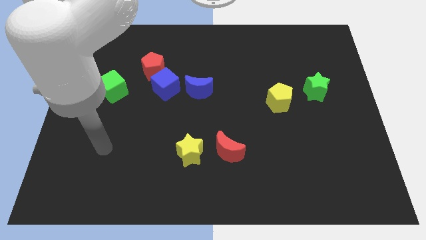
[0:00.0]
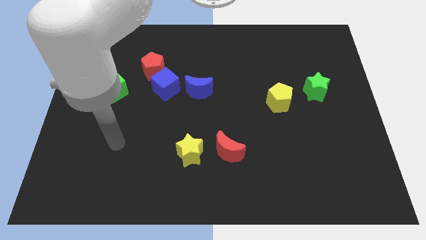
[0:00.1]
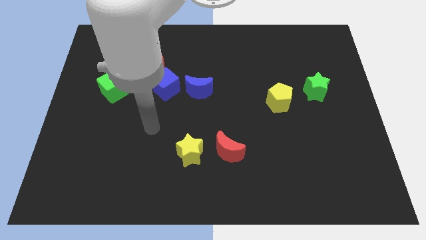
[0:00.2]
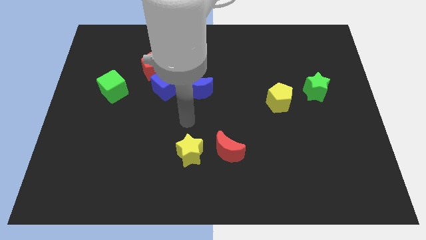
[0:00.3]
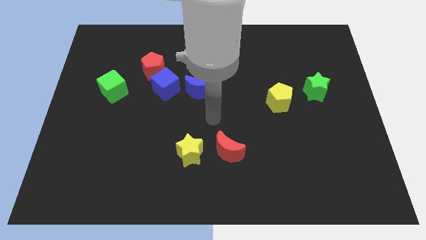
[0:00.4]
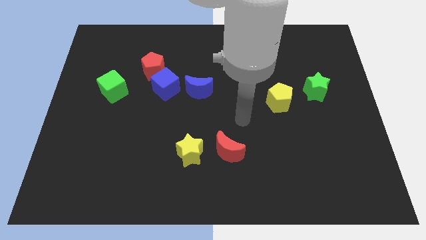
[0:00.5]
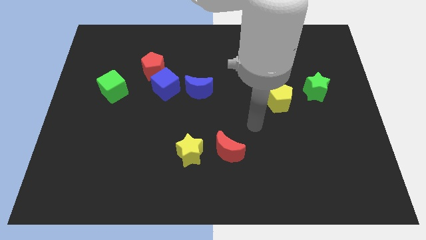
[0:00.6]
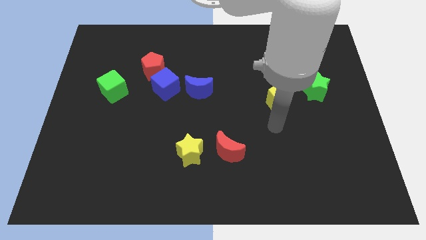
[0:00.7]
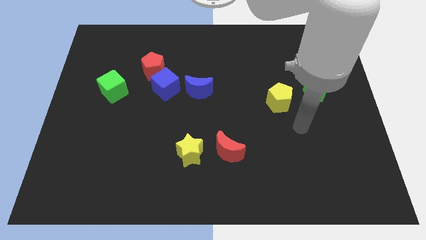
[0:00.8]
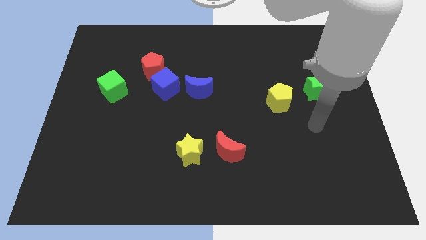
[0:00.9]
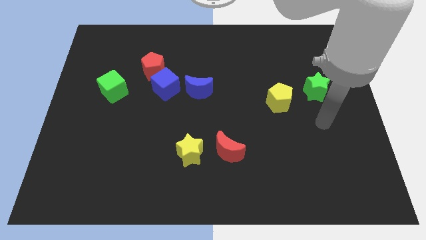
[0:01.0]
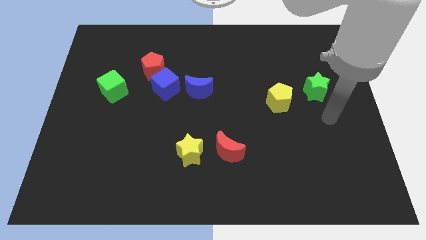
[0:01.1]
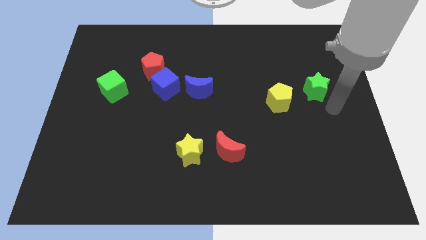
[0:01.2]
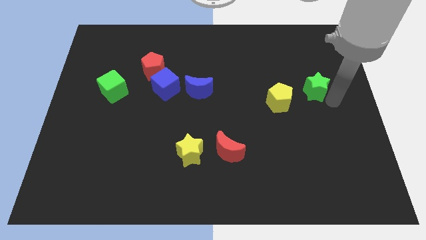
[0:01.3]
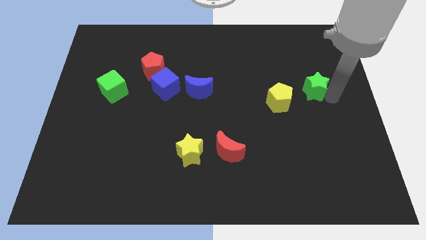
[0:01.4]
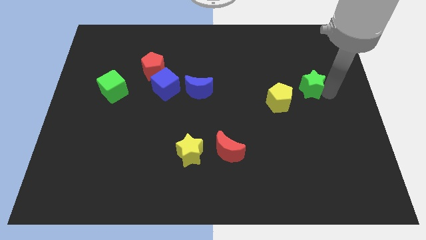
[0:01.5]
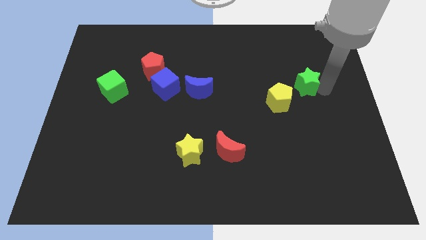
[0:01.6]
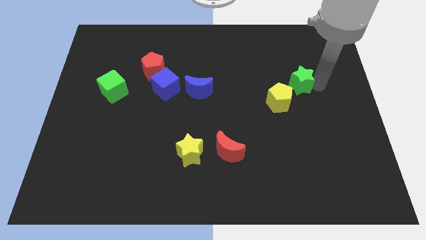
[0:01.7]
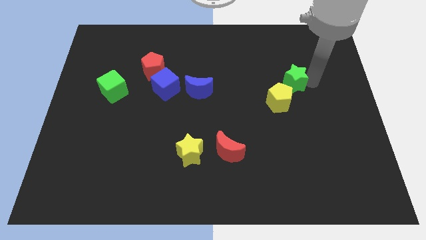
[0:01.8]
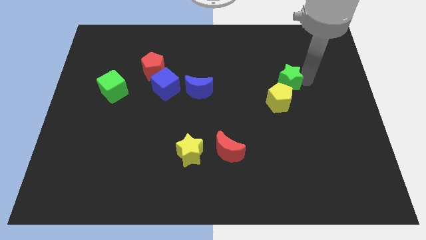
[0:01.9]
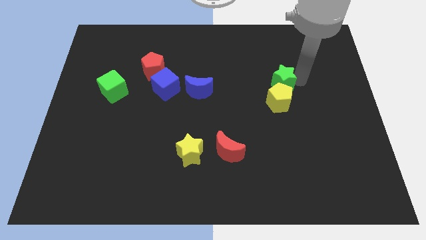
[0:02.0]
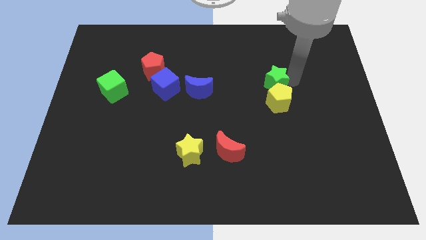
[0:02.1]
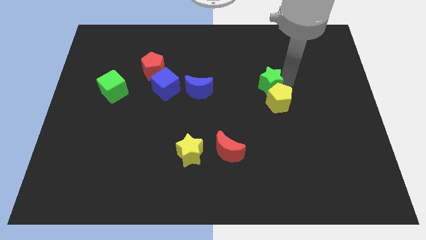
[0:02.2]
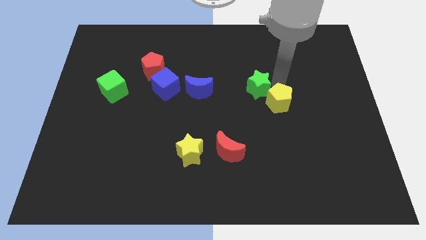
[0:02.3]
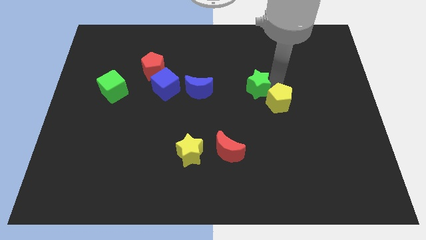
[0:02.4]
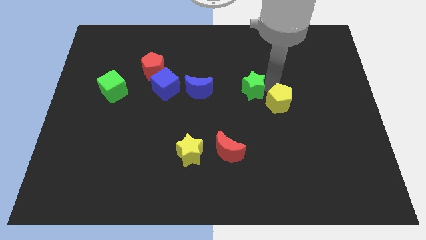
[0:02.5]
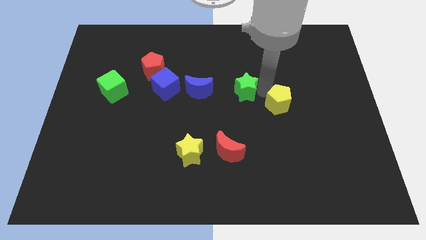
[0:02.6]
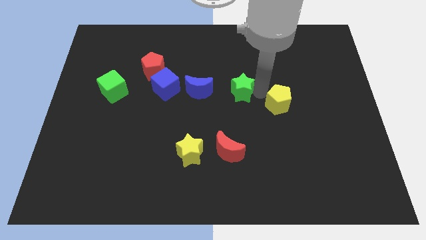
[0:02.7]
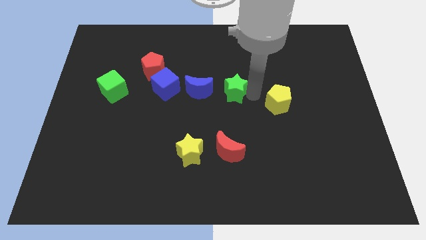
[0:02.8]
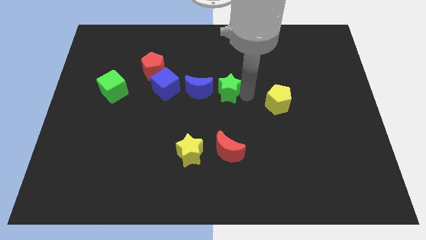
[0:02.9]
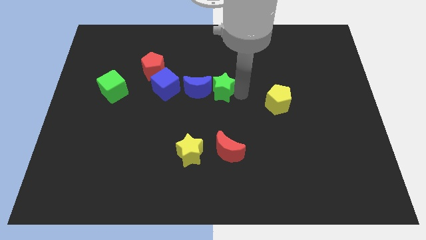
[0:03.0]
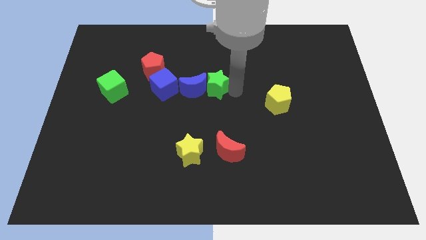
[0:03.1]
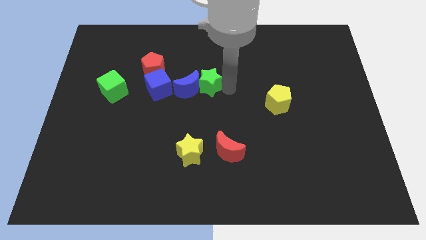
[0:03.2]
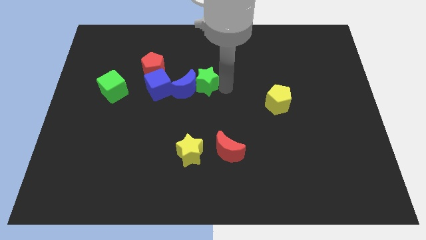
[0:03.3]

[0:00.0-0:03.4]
move the green star next to the blue moon

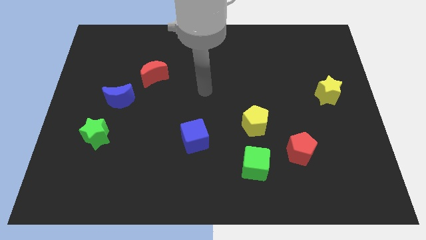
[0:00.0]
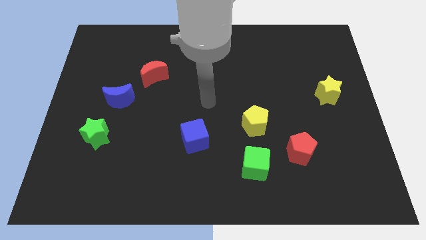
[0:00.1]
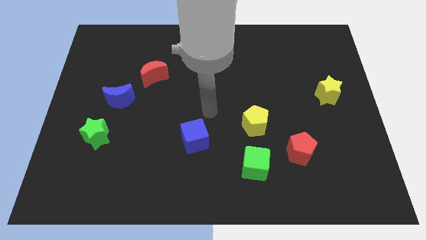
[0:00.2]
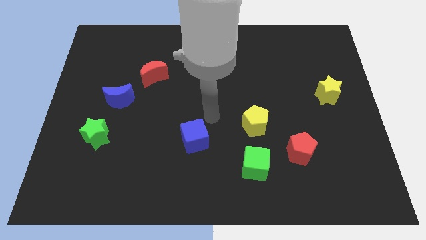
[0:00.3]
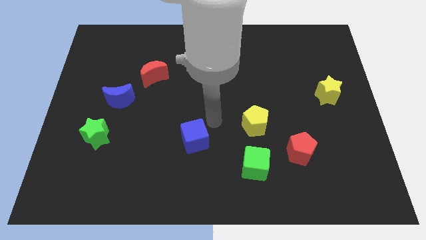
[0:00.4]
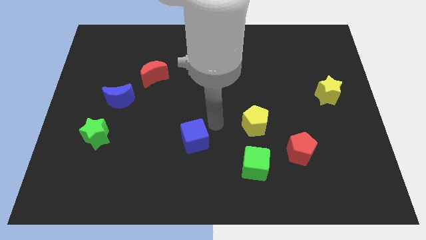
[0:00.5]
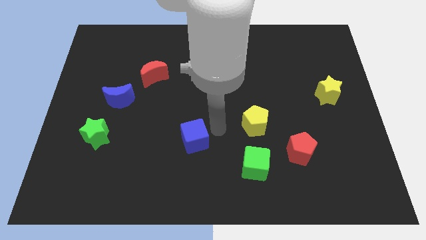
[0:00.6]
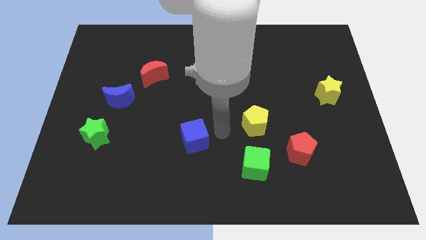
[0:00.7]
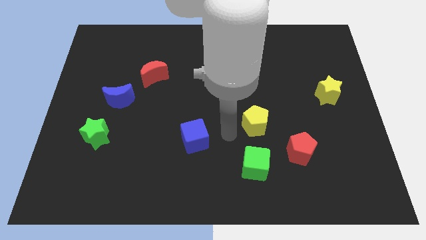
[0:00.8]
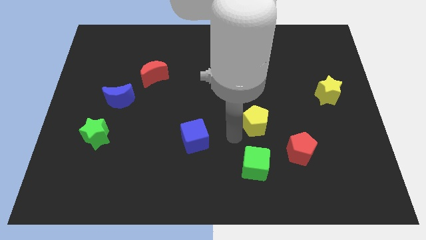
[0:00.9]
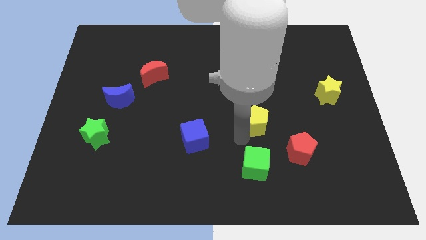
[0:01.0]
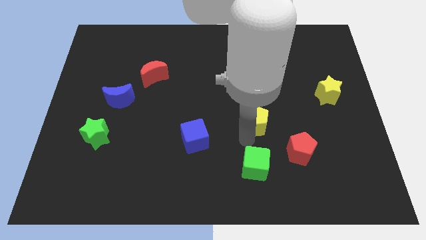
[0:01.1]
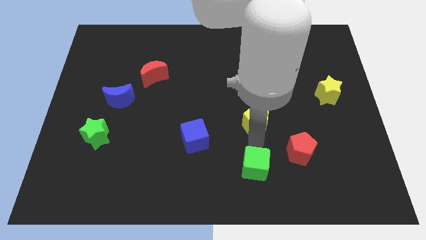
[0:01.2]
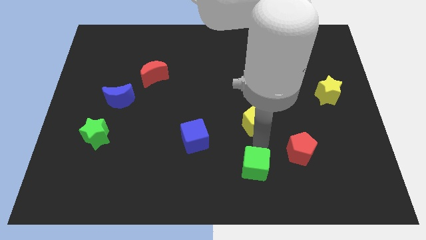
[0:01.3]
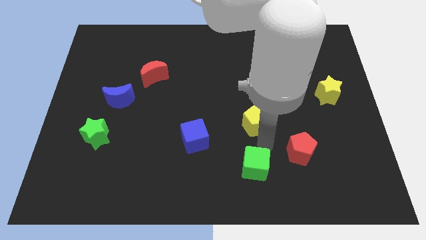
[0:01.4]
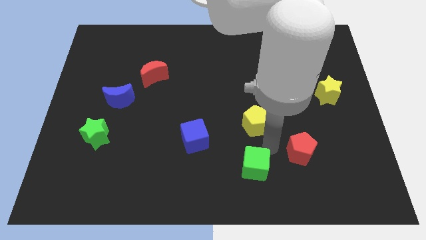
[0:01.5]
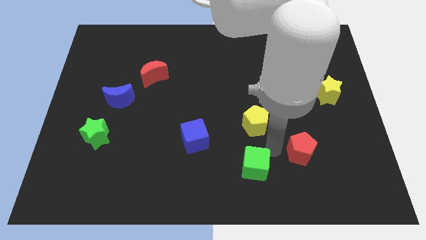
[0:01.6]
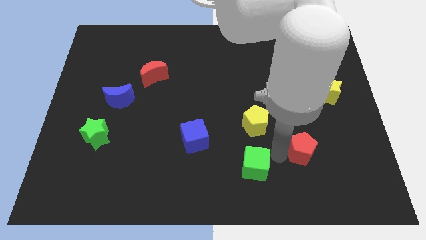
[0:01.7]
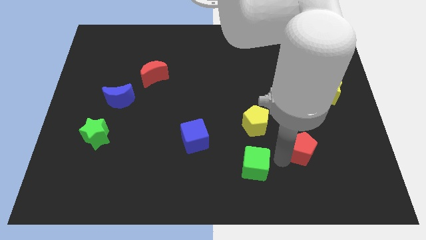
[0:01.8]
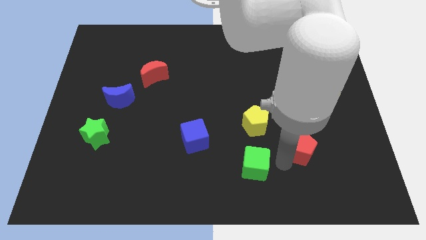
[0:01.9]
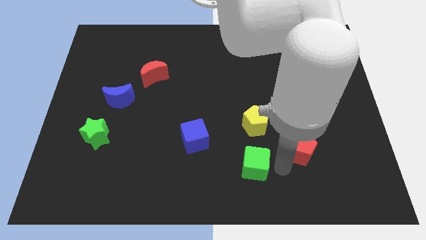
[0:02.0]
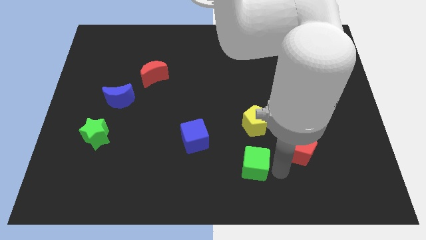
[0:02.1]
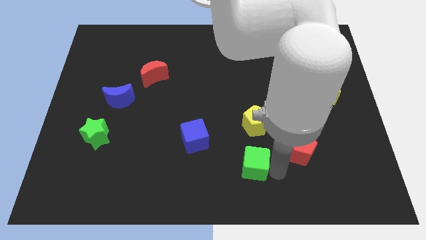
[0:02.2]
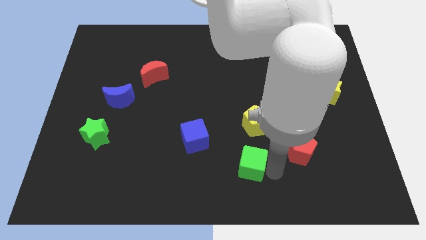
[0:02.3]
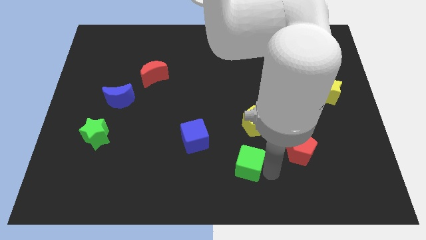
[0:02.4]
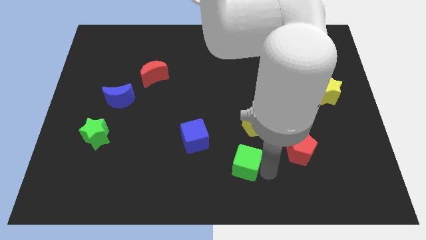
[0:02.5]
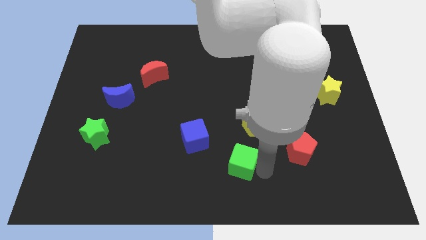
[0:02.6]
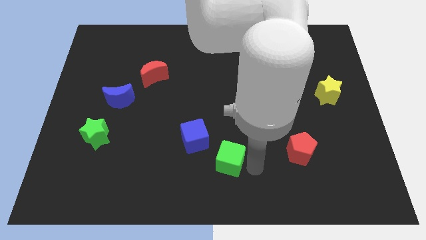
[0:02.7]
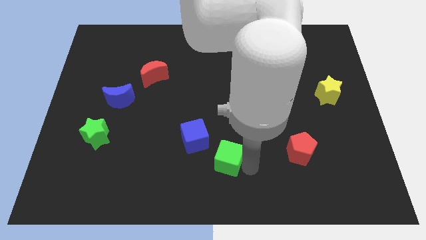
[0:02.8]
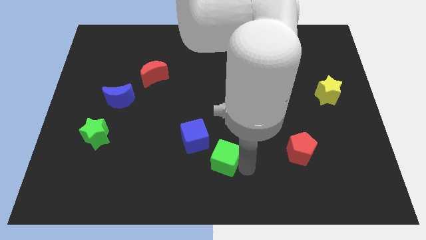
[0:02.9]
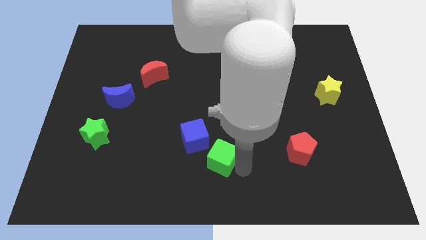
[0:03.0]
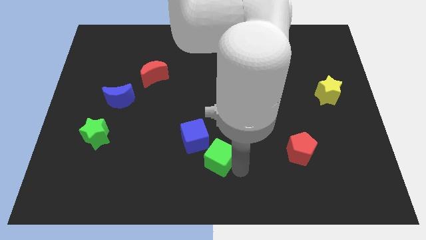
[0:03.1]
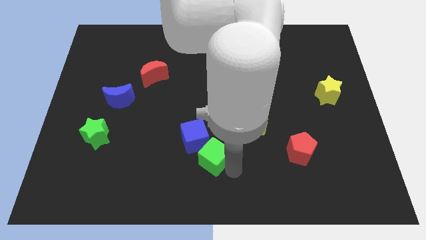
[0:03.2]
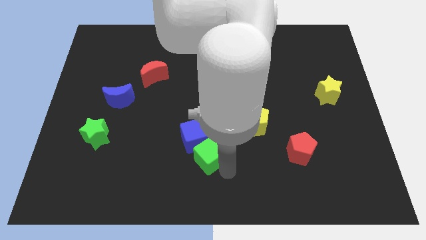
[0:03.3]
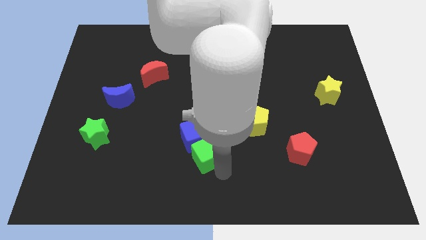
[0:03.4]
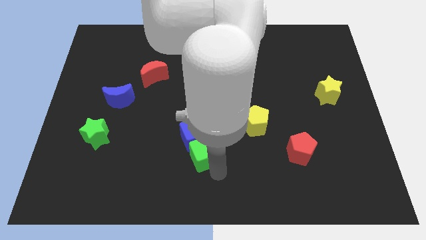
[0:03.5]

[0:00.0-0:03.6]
move the green cube to the blue cube

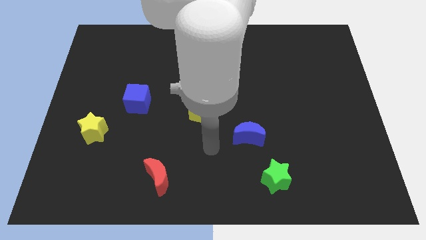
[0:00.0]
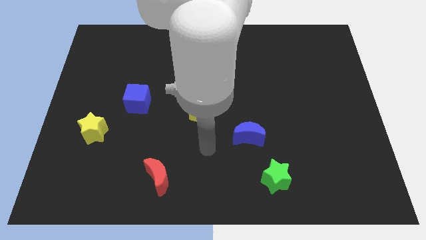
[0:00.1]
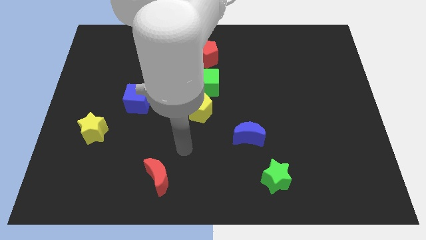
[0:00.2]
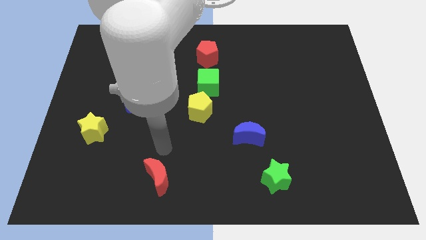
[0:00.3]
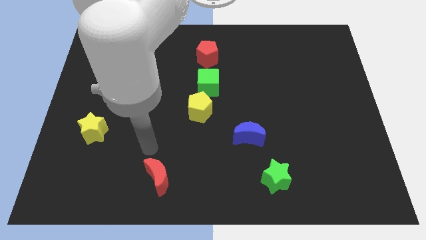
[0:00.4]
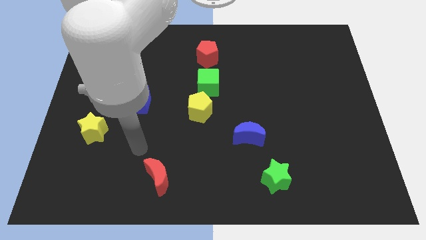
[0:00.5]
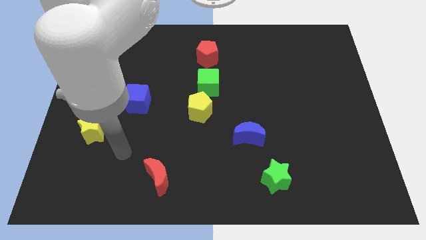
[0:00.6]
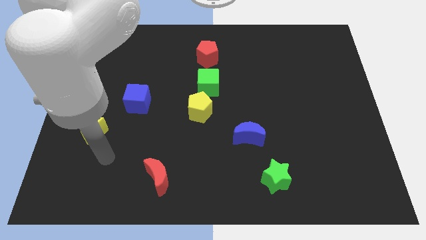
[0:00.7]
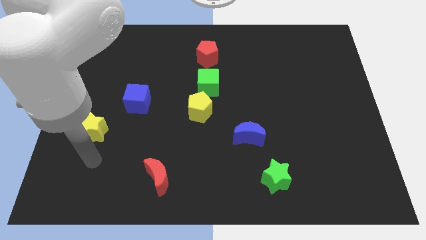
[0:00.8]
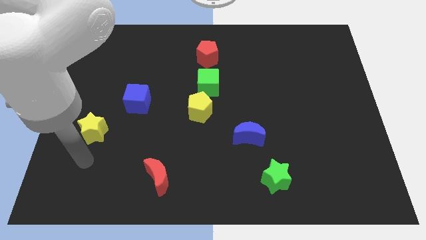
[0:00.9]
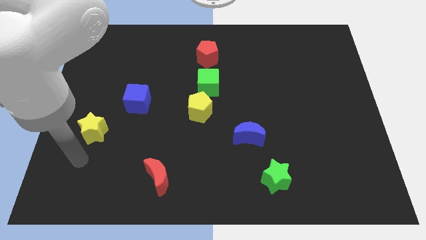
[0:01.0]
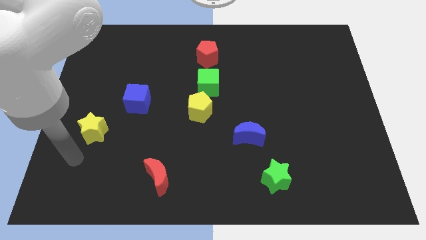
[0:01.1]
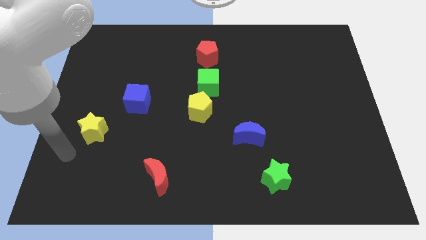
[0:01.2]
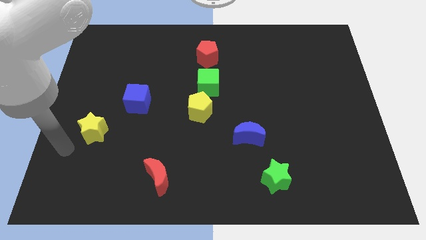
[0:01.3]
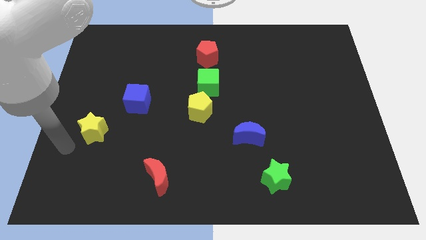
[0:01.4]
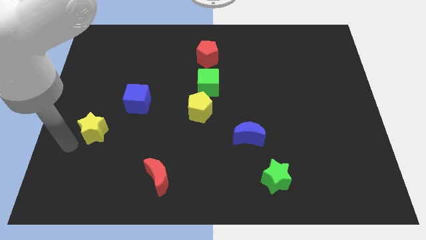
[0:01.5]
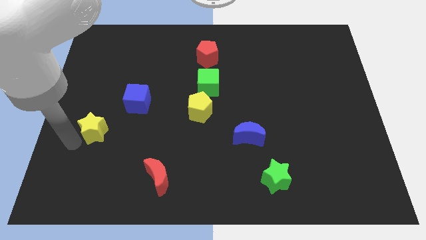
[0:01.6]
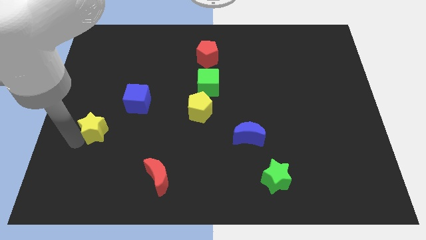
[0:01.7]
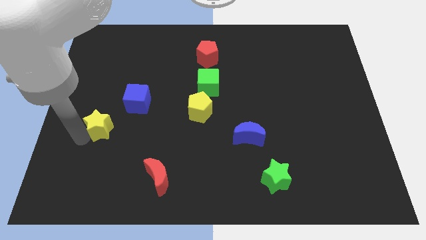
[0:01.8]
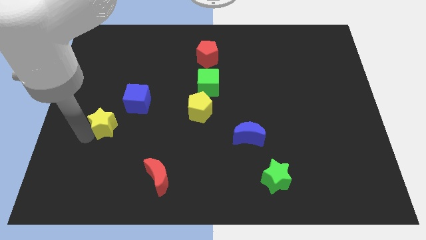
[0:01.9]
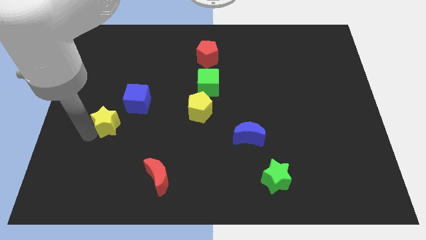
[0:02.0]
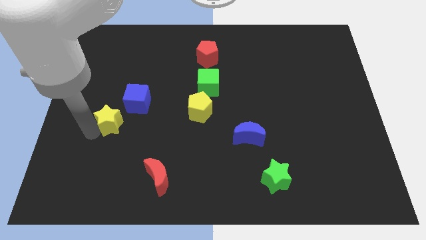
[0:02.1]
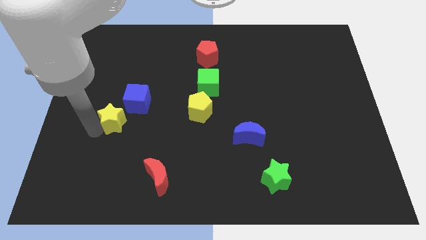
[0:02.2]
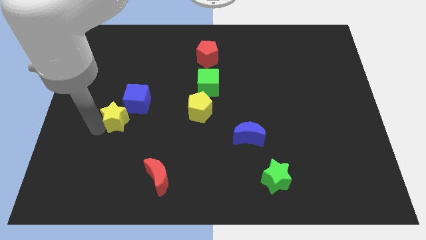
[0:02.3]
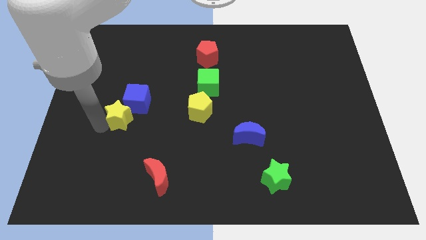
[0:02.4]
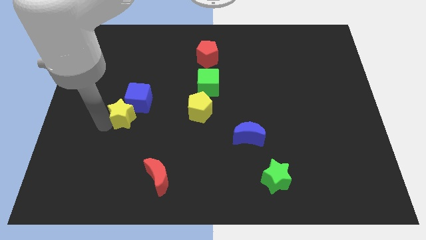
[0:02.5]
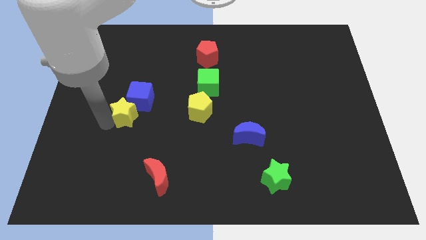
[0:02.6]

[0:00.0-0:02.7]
push the yellow star next to the blue cube
